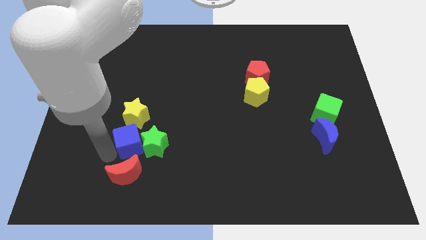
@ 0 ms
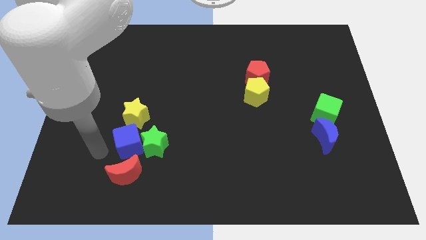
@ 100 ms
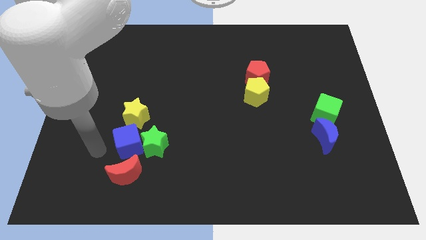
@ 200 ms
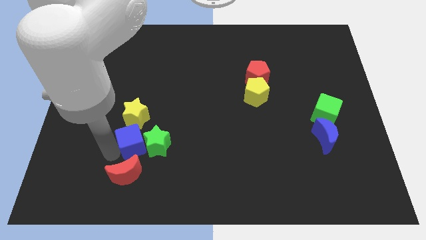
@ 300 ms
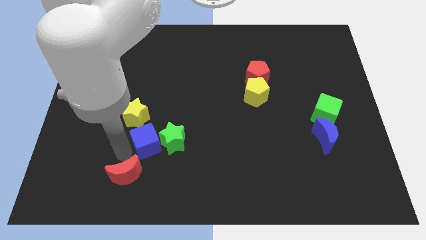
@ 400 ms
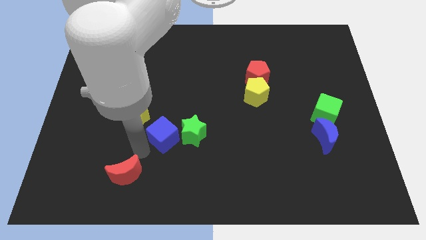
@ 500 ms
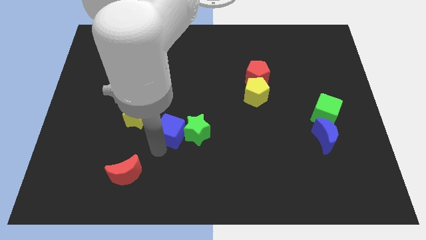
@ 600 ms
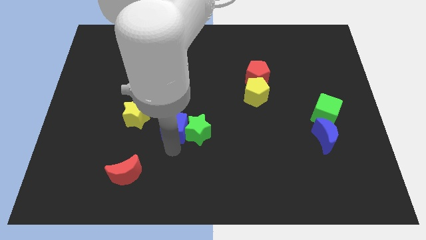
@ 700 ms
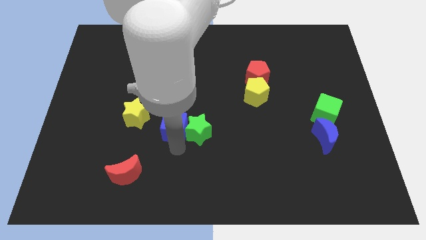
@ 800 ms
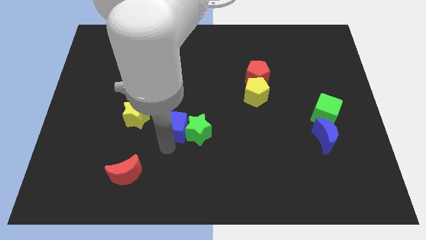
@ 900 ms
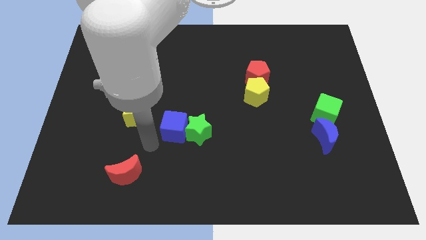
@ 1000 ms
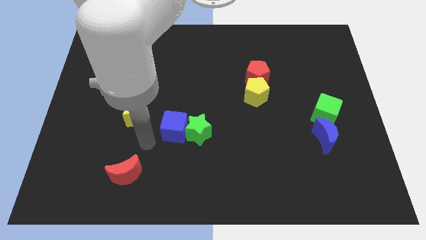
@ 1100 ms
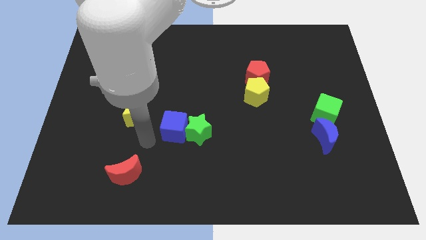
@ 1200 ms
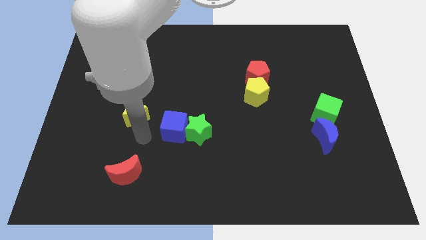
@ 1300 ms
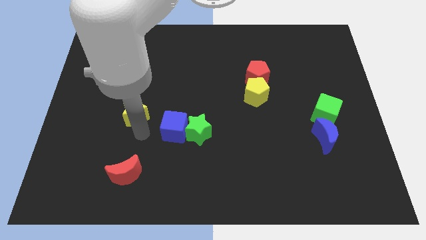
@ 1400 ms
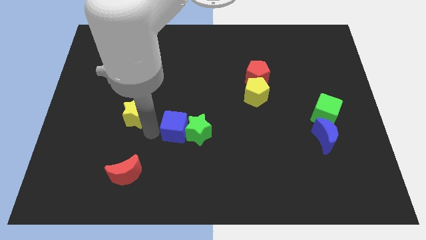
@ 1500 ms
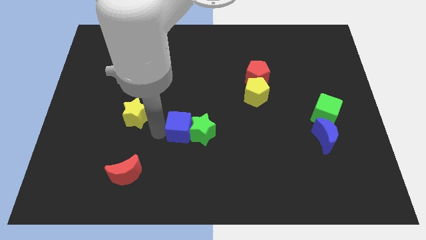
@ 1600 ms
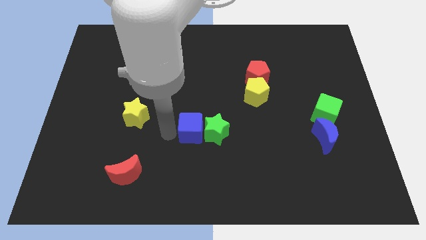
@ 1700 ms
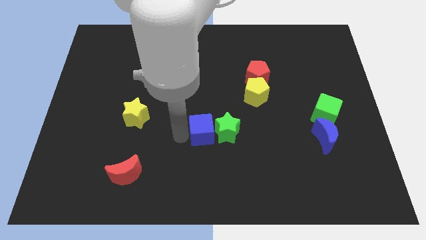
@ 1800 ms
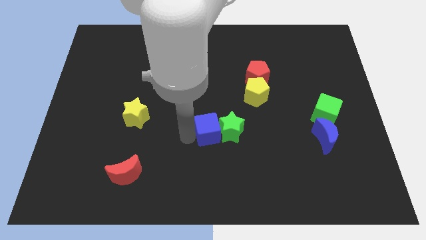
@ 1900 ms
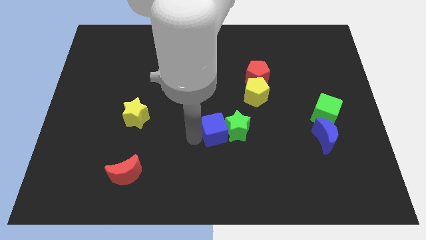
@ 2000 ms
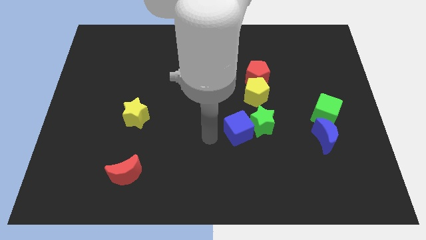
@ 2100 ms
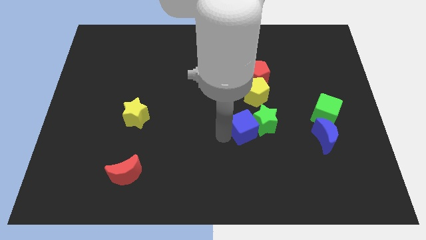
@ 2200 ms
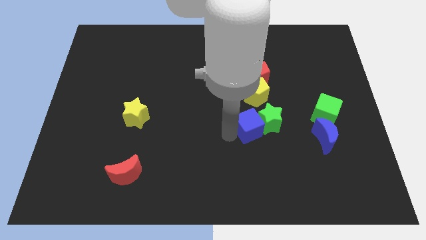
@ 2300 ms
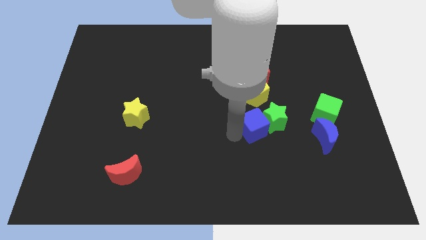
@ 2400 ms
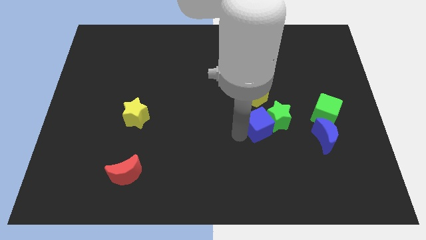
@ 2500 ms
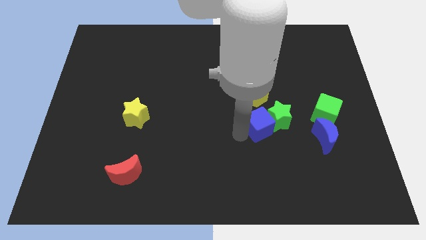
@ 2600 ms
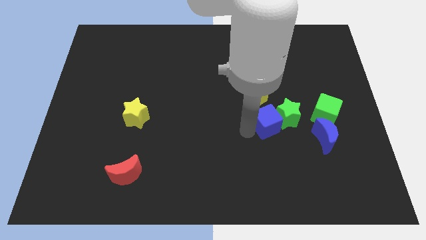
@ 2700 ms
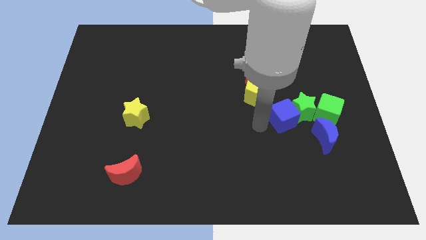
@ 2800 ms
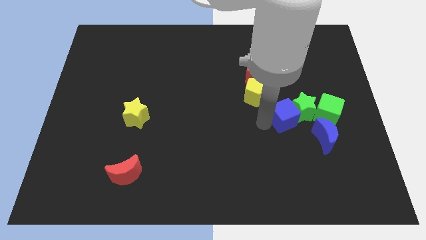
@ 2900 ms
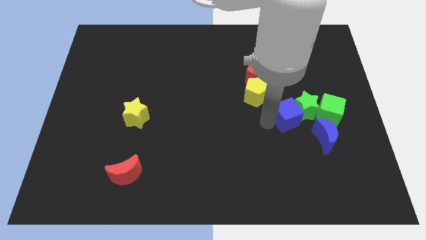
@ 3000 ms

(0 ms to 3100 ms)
drag the green star and the blue cube into the green cube

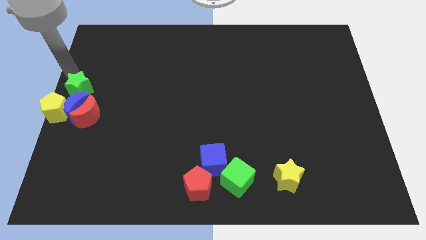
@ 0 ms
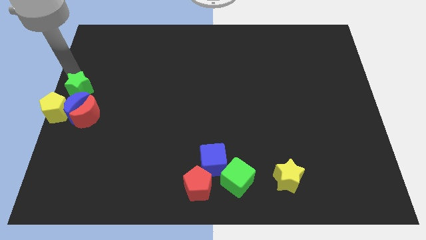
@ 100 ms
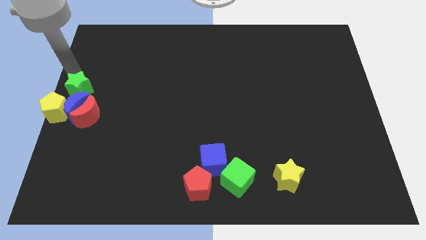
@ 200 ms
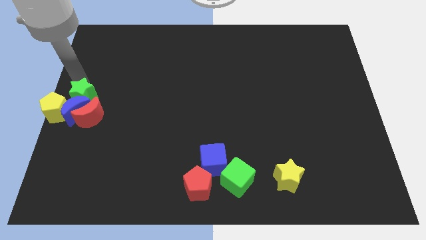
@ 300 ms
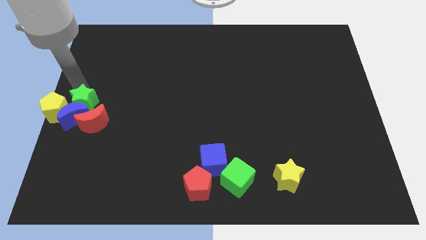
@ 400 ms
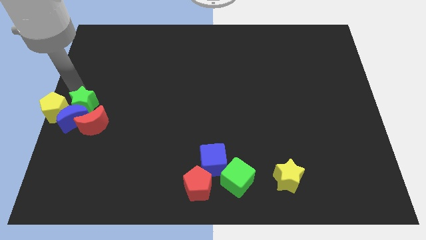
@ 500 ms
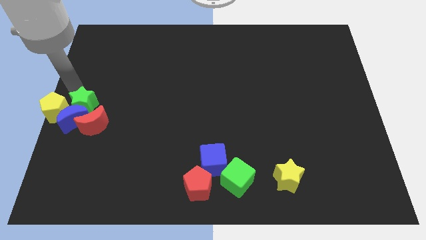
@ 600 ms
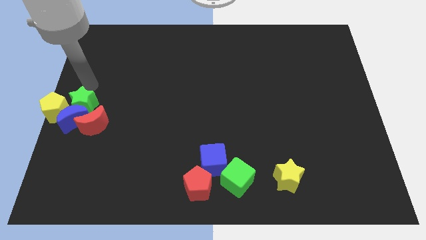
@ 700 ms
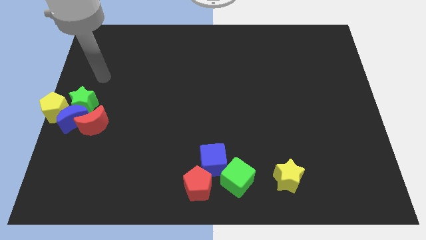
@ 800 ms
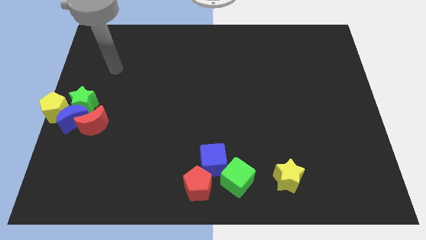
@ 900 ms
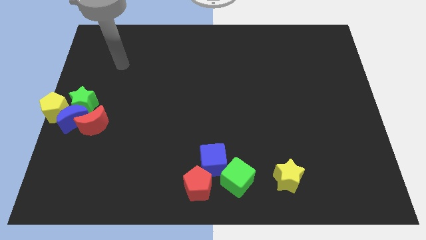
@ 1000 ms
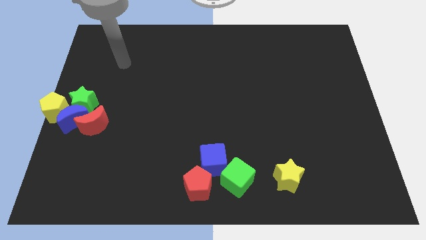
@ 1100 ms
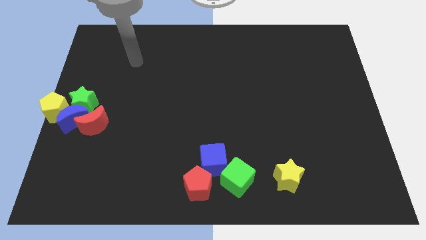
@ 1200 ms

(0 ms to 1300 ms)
push the green star into the top side of the blue moon

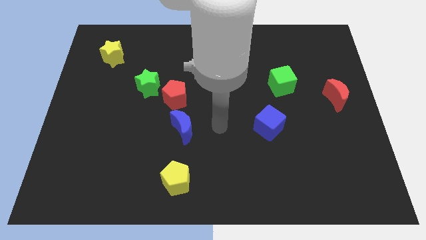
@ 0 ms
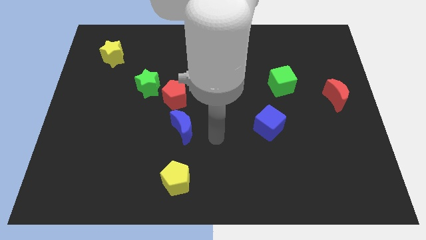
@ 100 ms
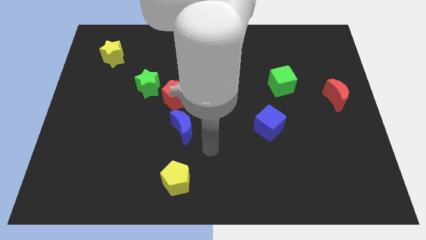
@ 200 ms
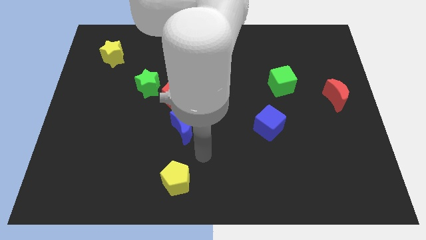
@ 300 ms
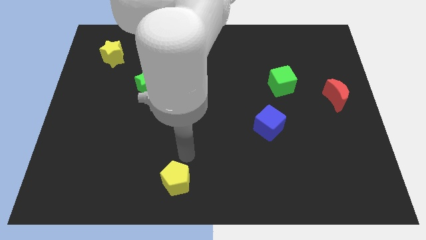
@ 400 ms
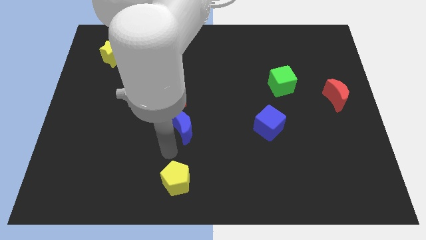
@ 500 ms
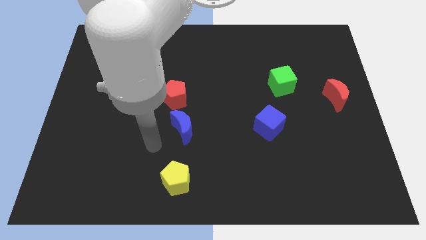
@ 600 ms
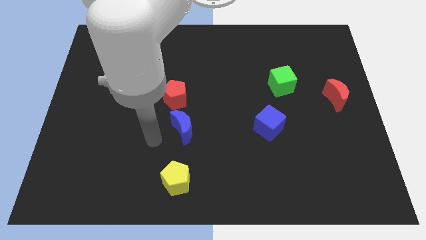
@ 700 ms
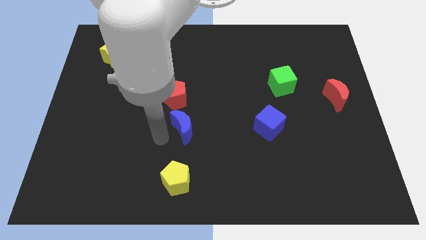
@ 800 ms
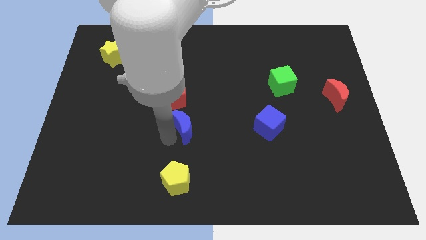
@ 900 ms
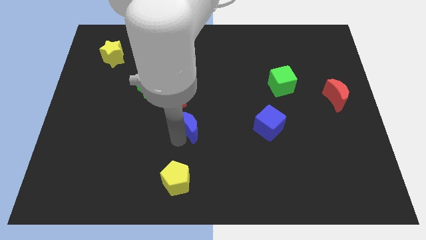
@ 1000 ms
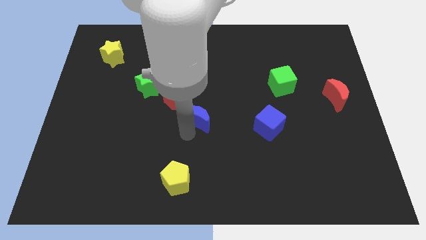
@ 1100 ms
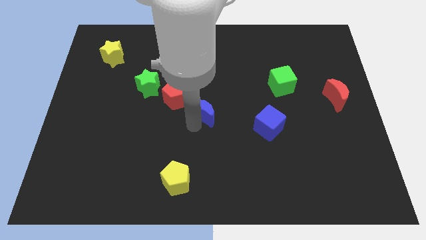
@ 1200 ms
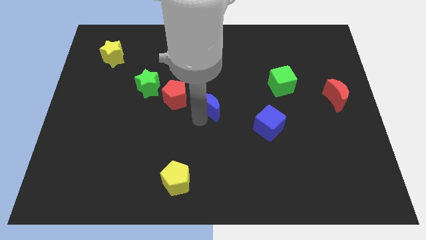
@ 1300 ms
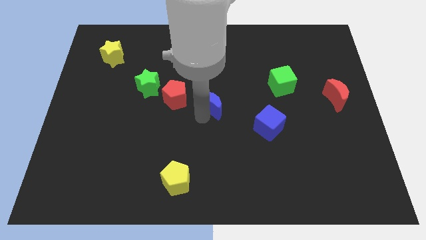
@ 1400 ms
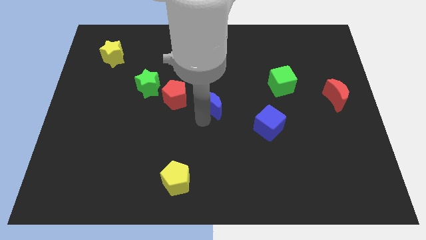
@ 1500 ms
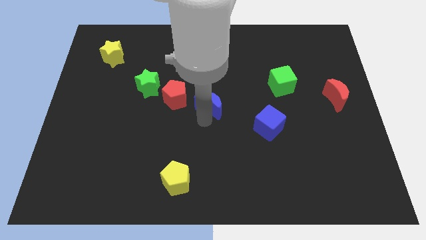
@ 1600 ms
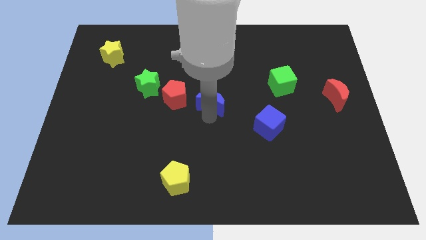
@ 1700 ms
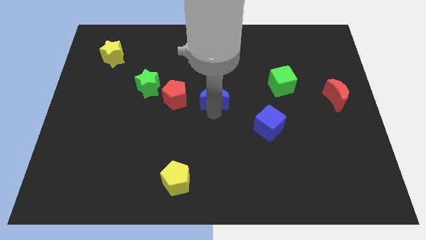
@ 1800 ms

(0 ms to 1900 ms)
move the blue crescent to the center of the board

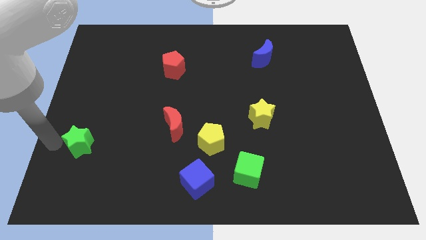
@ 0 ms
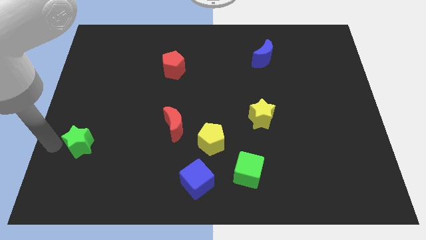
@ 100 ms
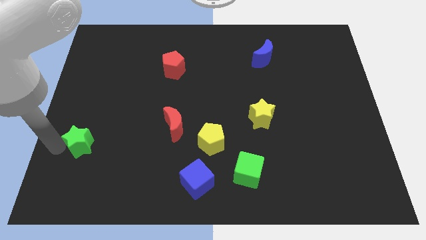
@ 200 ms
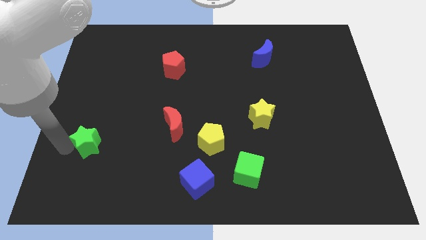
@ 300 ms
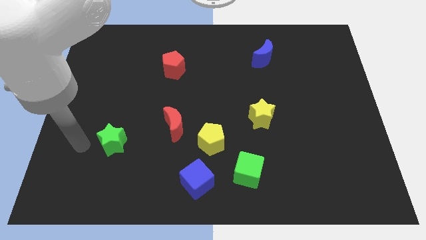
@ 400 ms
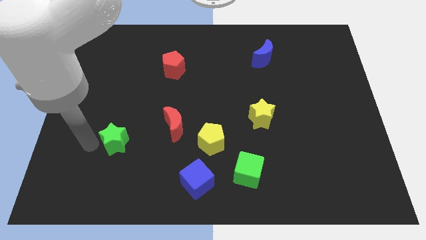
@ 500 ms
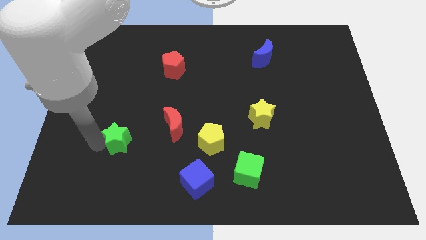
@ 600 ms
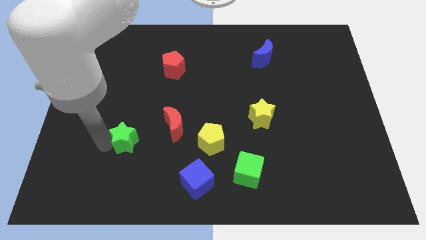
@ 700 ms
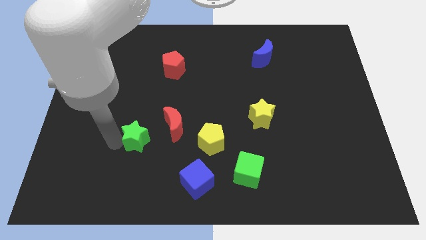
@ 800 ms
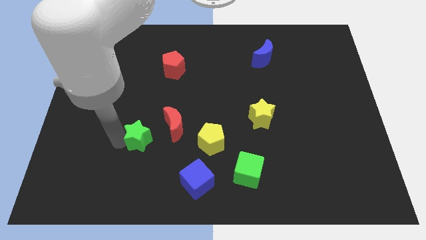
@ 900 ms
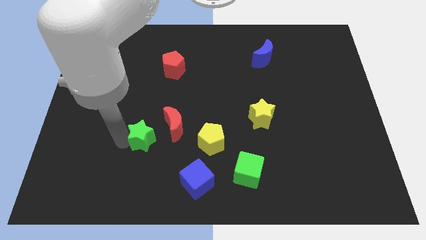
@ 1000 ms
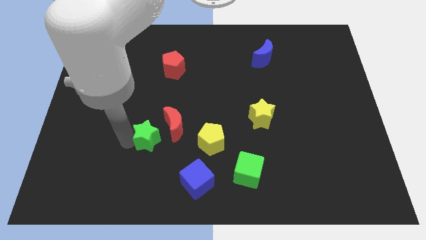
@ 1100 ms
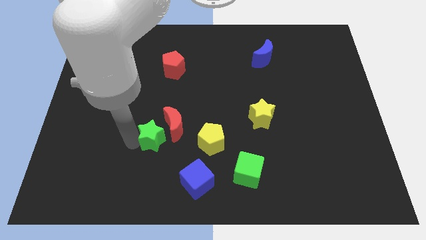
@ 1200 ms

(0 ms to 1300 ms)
place the green star parallel to the red moon

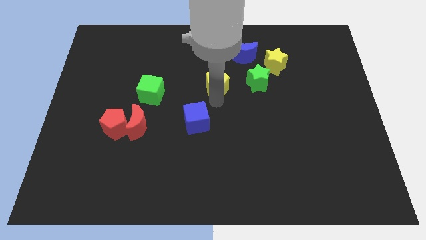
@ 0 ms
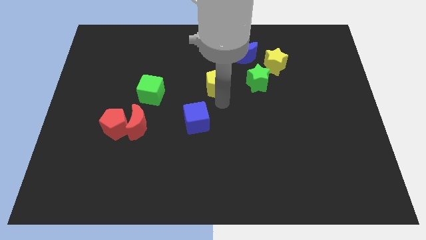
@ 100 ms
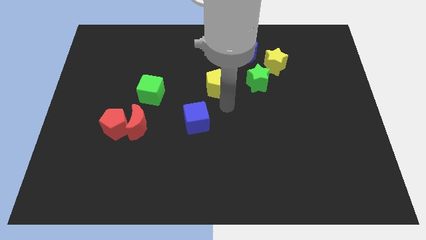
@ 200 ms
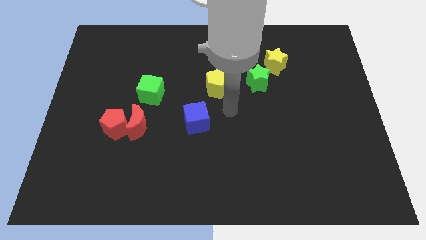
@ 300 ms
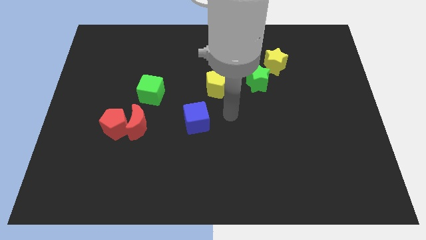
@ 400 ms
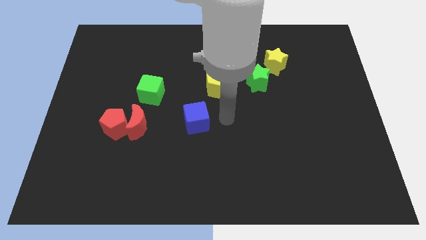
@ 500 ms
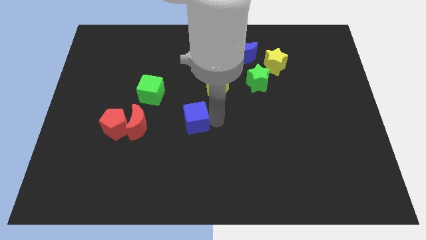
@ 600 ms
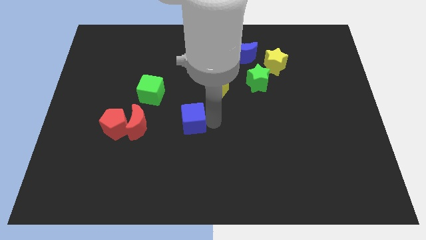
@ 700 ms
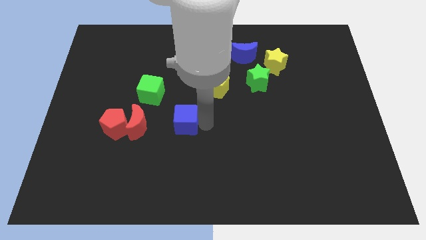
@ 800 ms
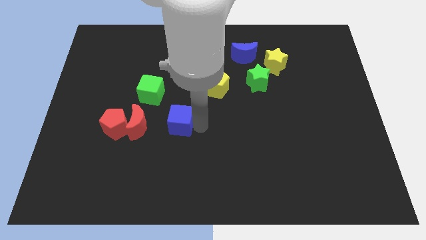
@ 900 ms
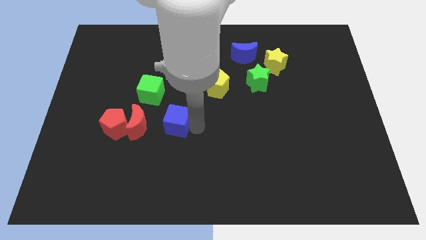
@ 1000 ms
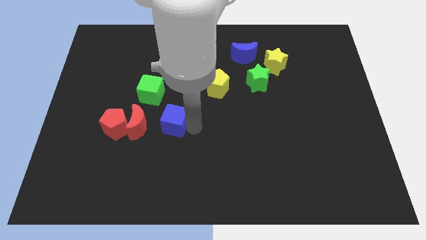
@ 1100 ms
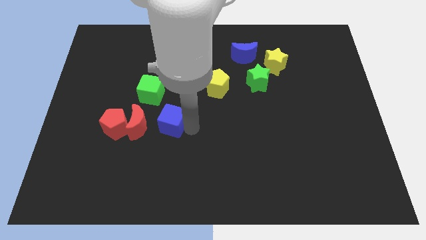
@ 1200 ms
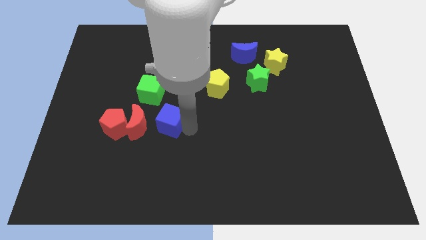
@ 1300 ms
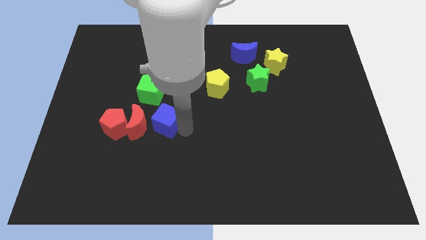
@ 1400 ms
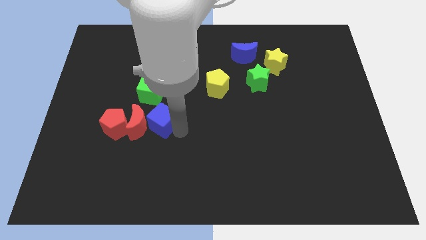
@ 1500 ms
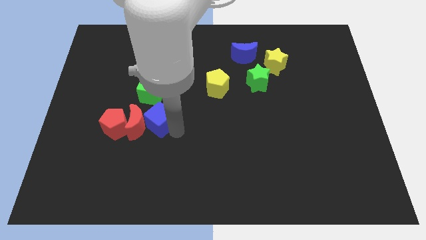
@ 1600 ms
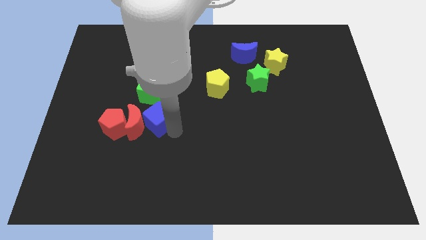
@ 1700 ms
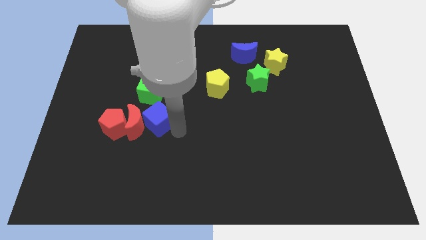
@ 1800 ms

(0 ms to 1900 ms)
move blue cube to the right of red moon
